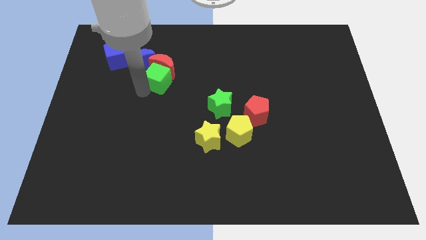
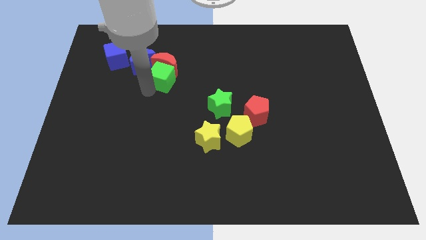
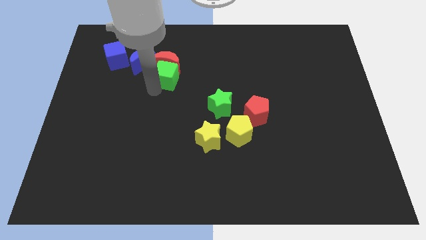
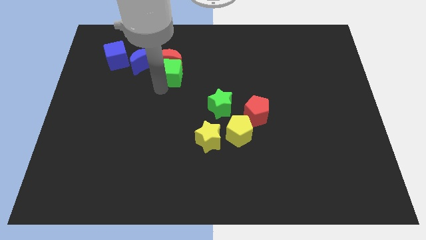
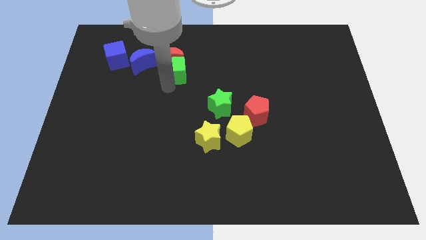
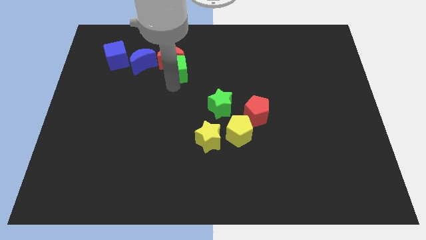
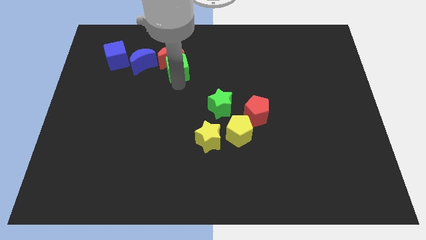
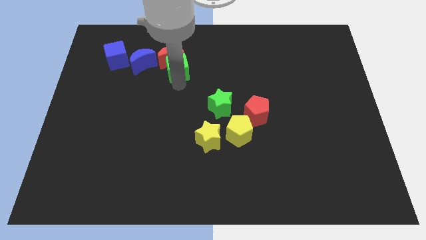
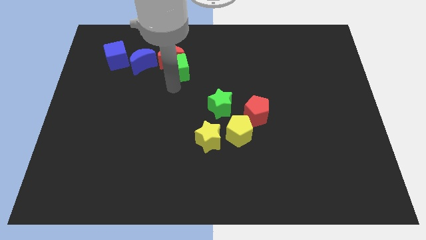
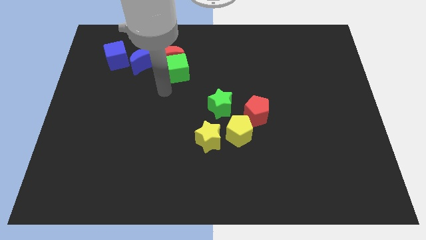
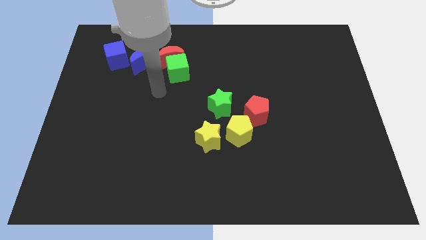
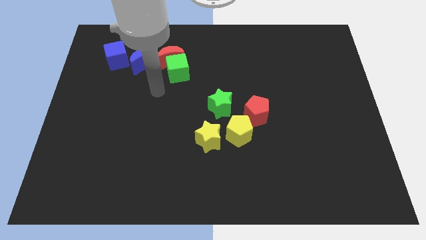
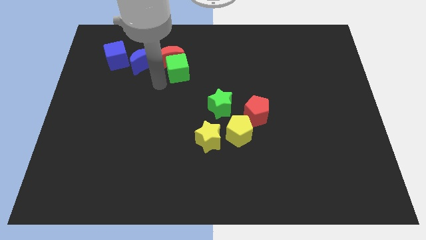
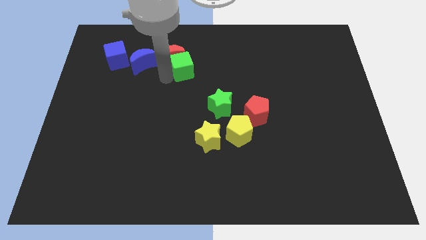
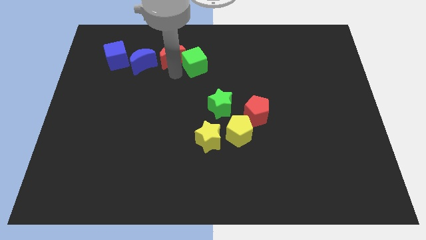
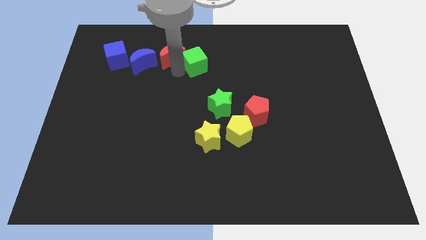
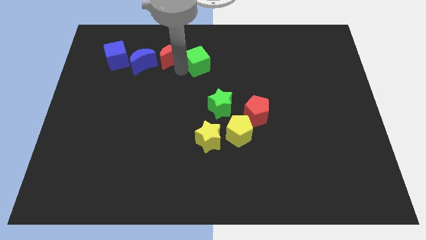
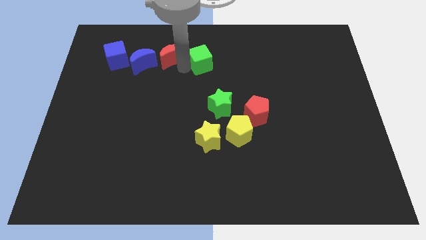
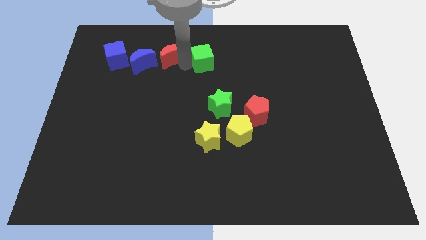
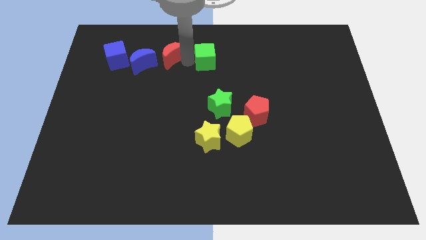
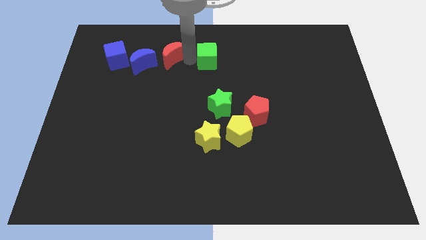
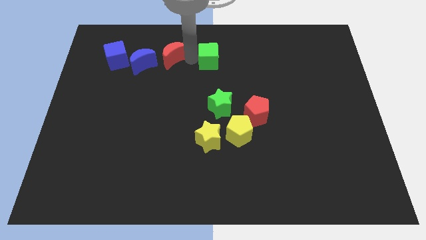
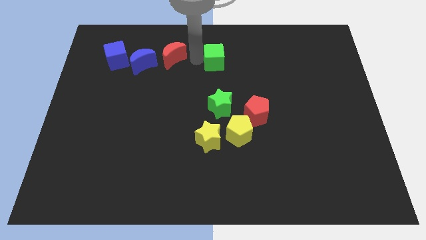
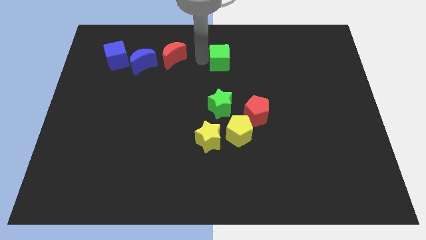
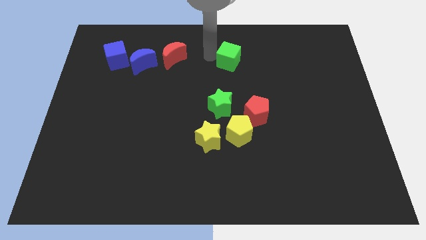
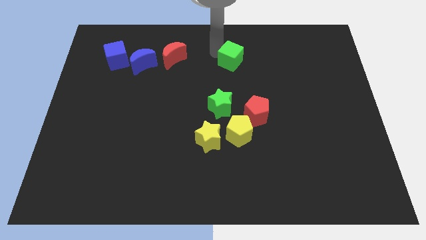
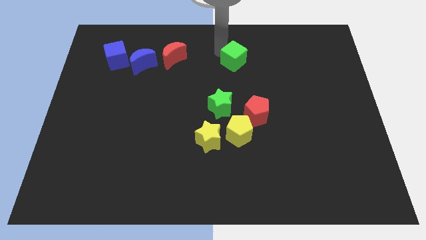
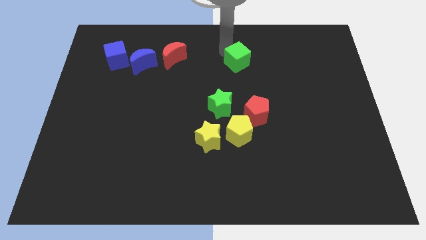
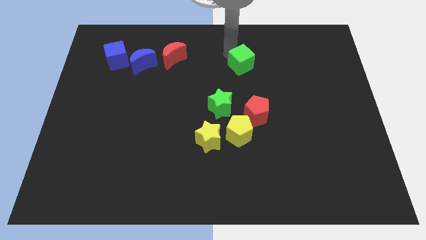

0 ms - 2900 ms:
place the green cube towards the top of the green star

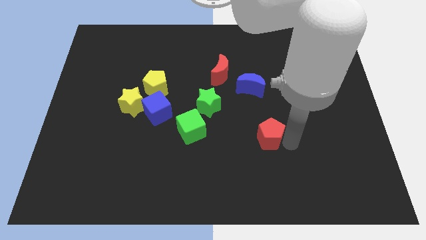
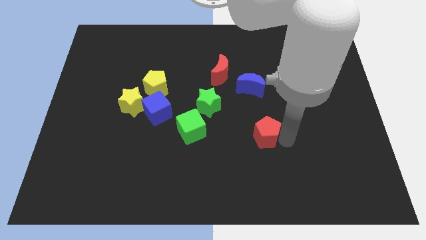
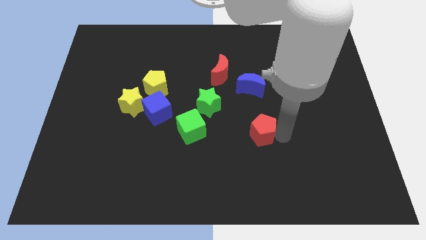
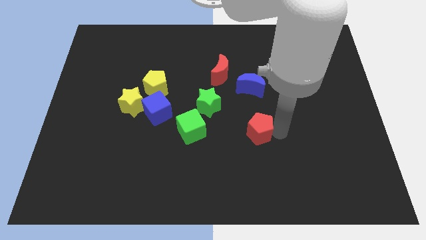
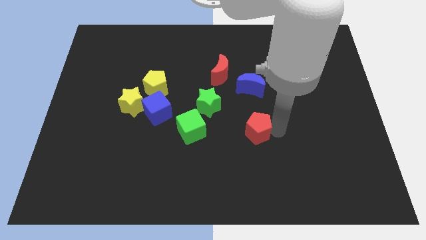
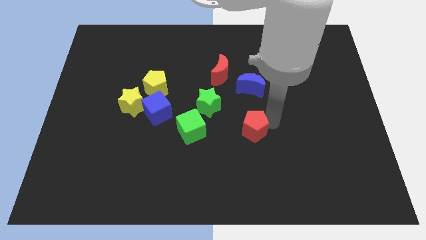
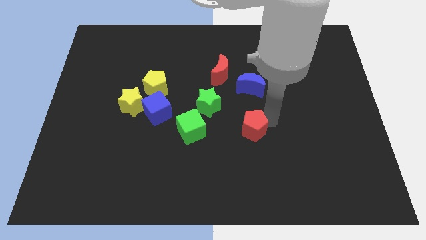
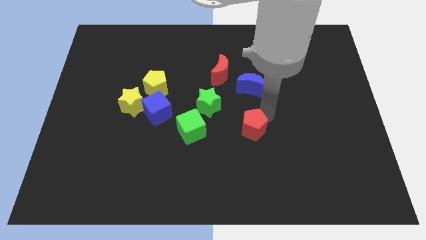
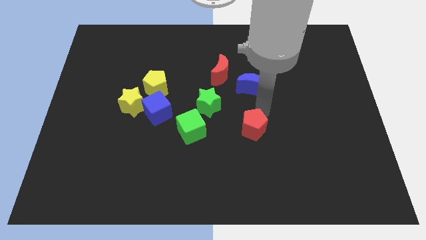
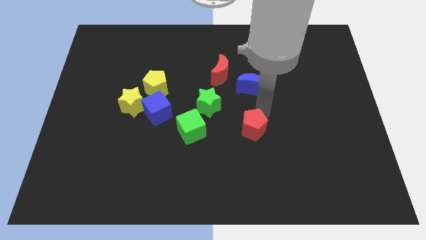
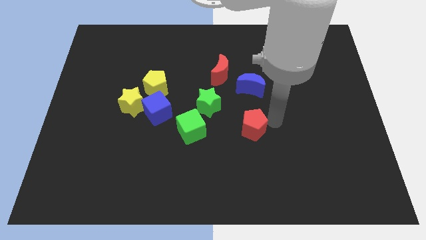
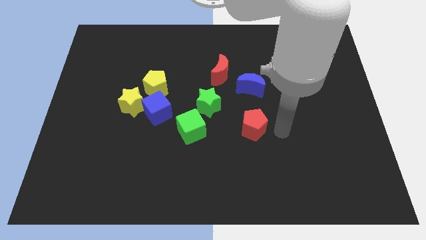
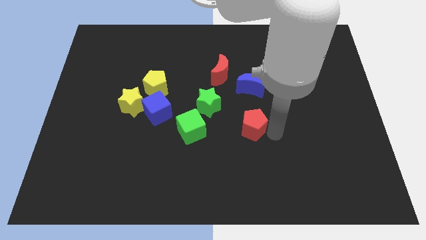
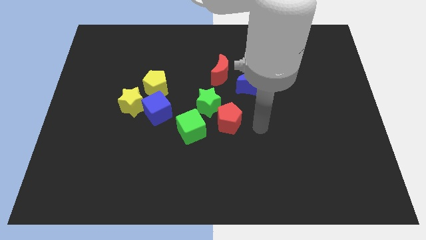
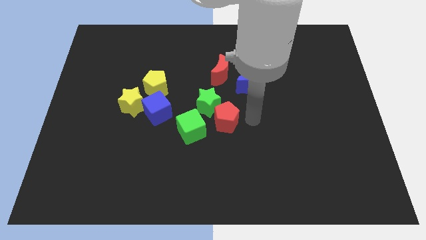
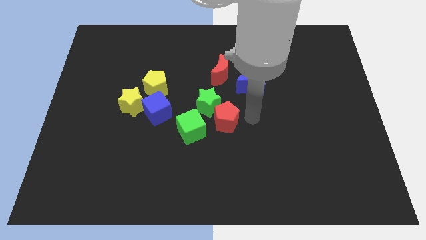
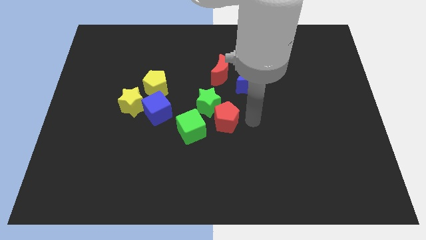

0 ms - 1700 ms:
push the red pentagon close to the green star

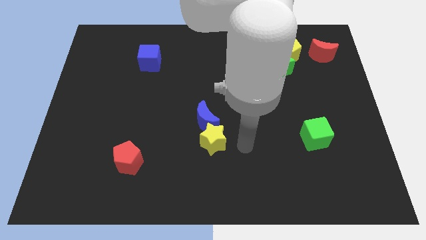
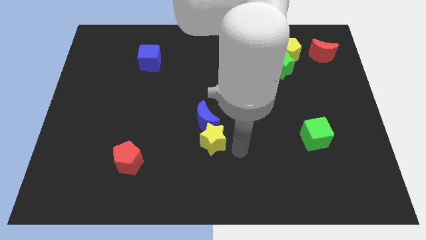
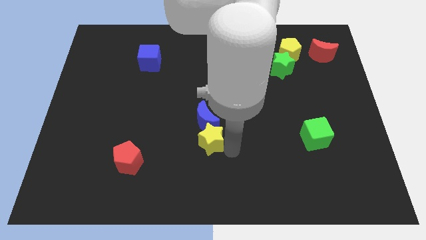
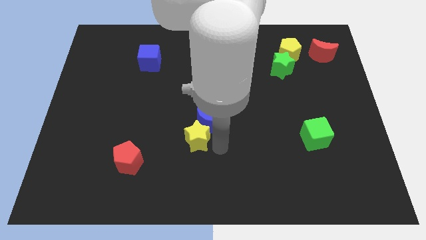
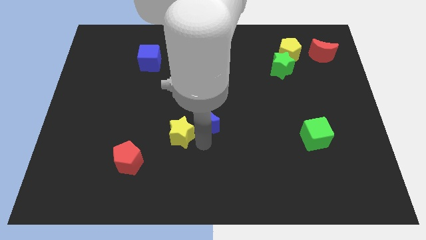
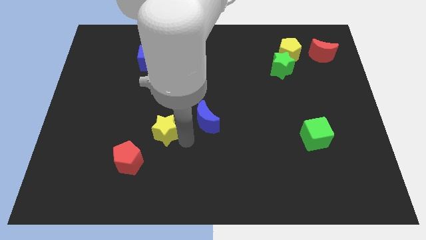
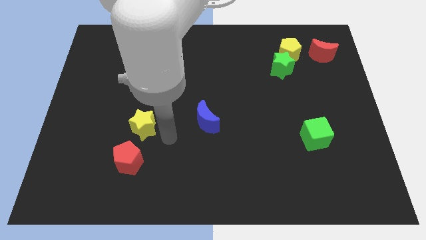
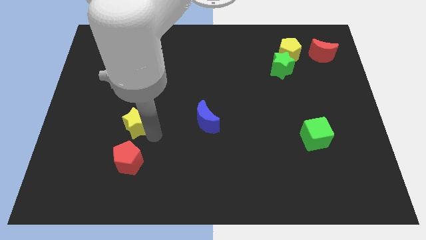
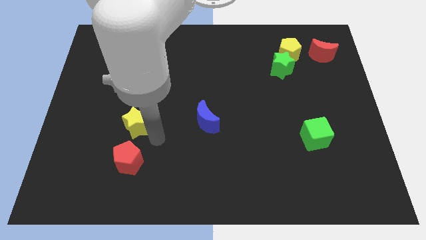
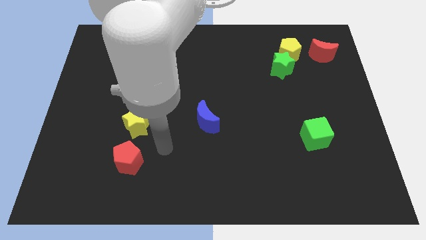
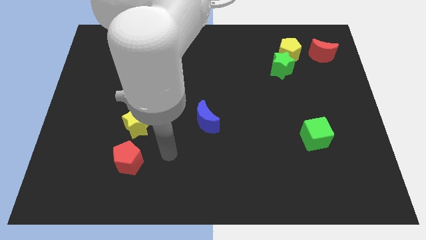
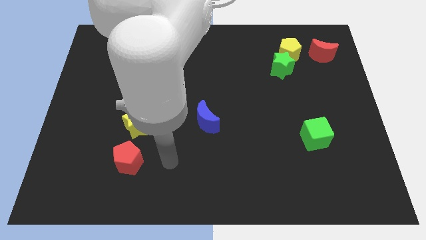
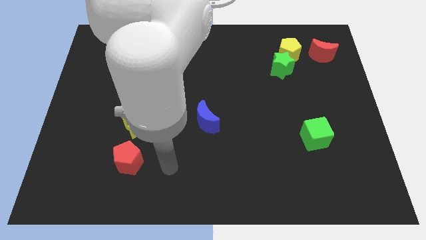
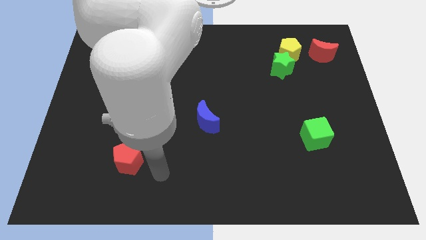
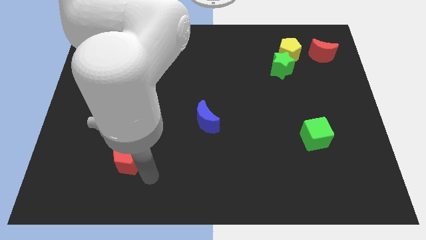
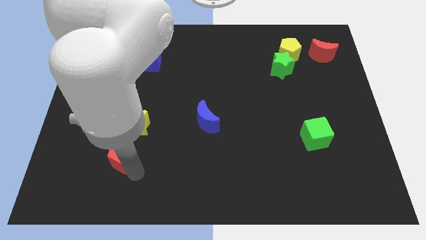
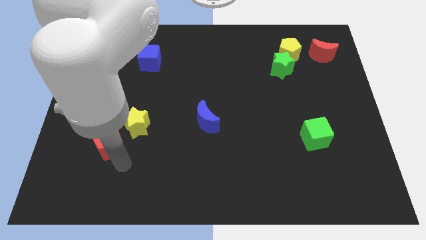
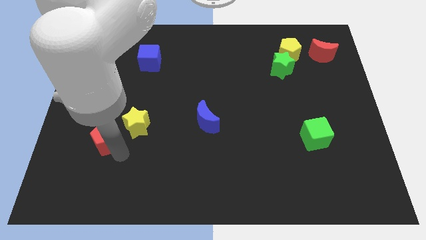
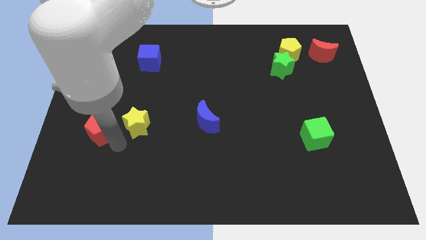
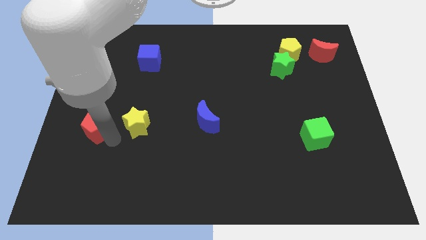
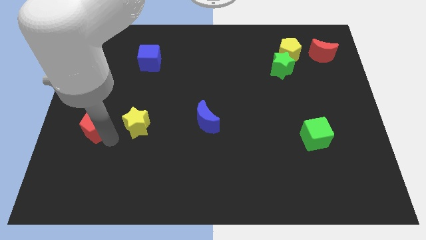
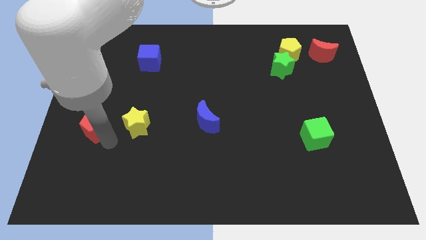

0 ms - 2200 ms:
move red pentagon to the left of yellow star

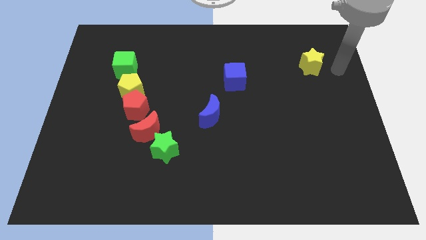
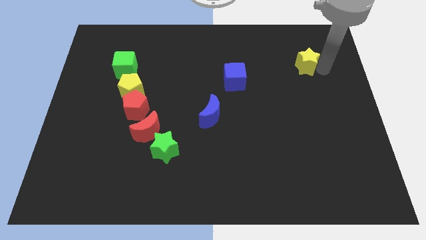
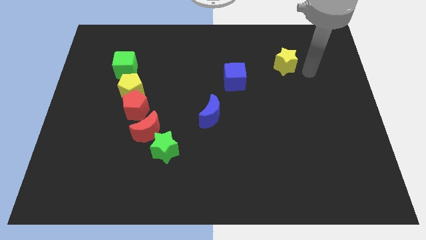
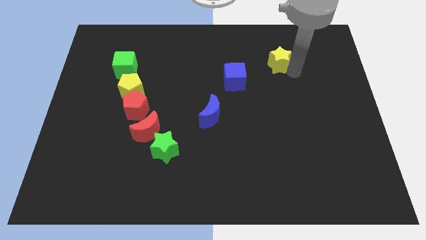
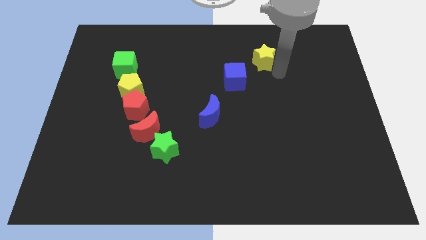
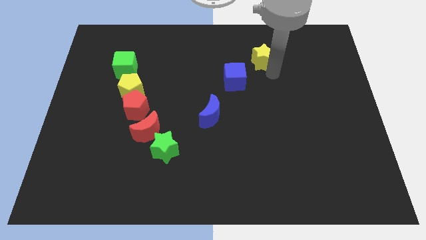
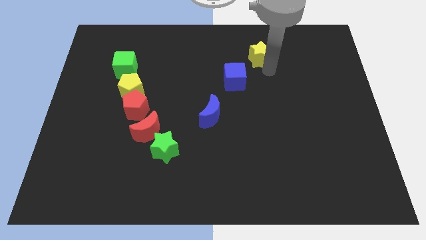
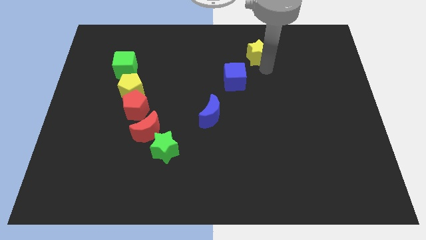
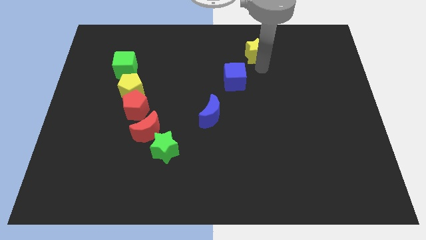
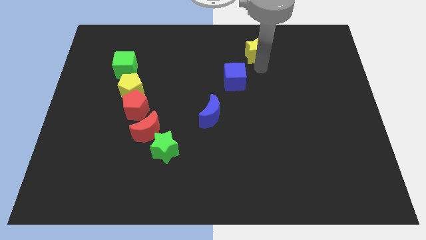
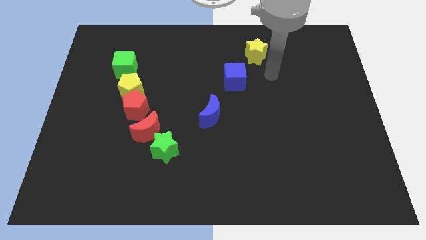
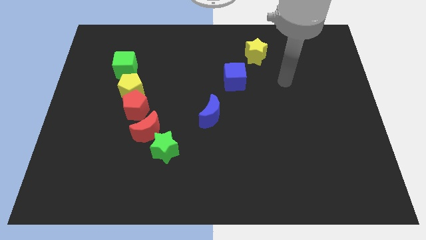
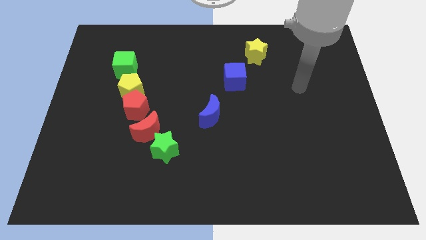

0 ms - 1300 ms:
push the yellow star slightly towards the left side

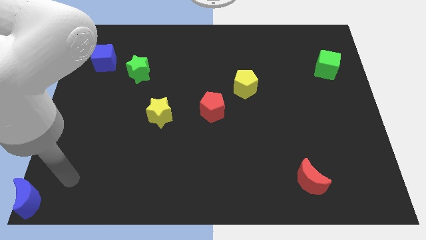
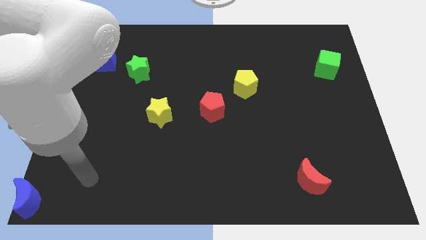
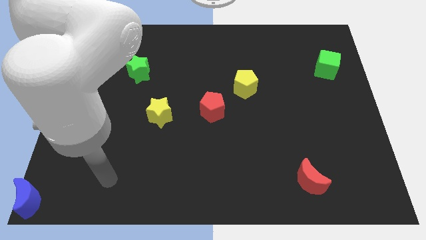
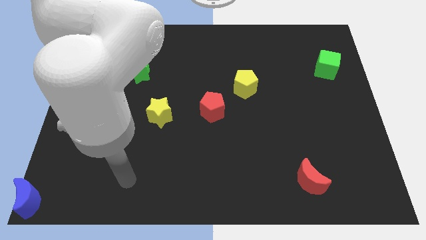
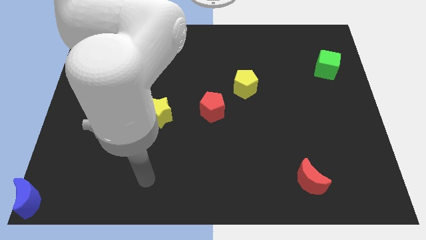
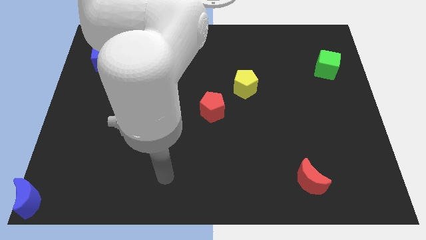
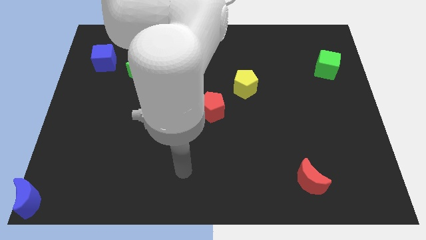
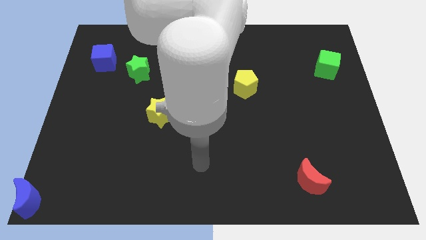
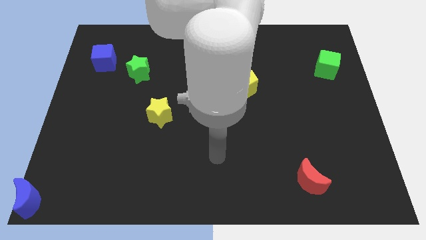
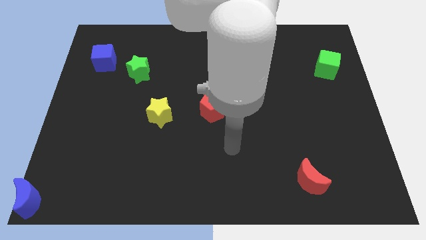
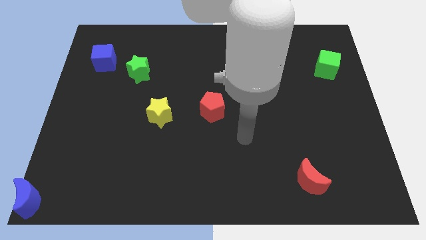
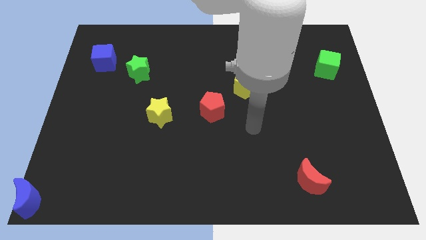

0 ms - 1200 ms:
move your arm away from blue moon
